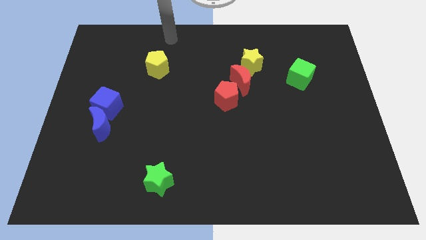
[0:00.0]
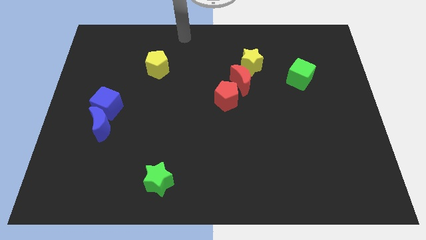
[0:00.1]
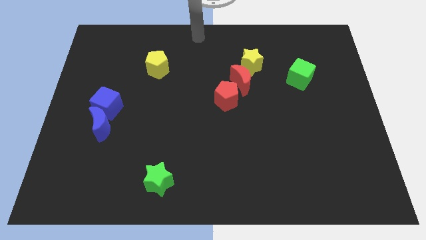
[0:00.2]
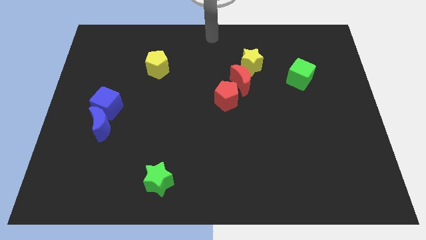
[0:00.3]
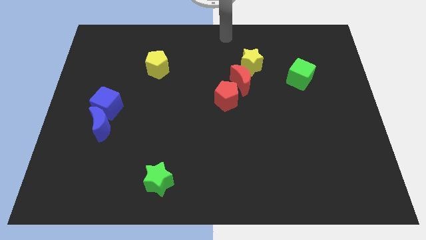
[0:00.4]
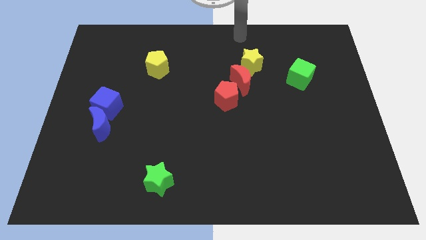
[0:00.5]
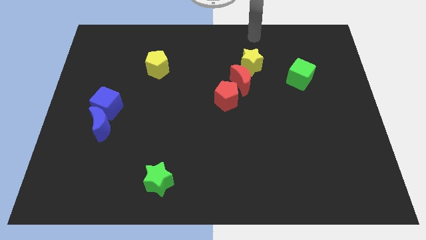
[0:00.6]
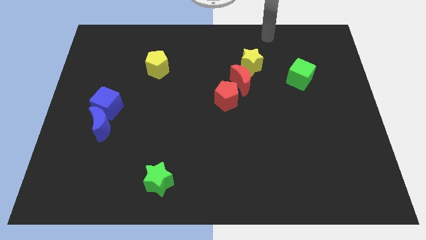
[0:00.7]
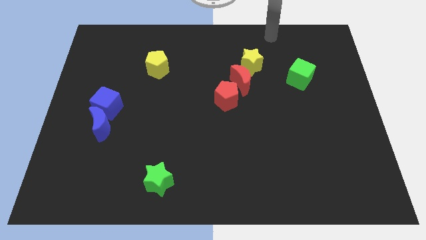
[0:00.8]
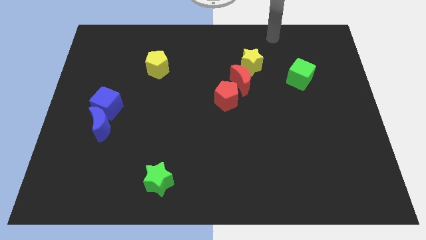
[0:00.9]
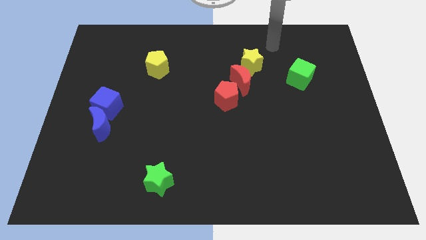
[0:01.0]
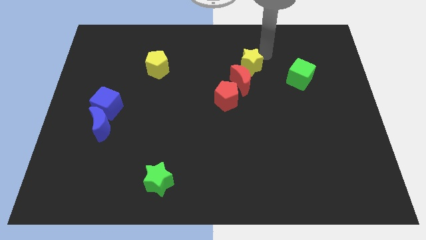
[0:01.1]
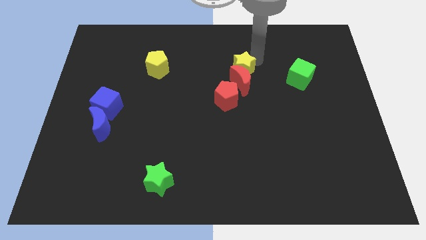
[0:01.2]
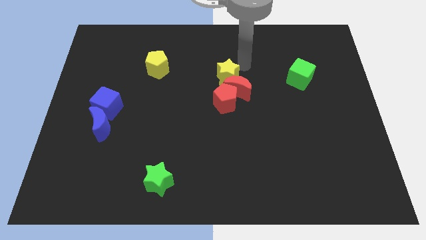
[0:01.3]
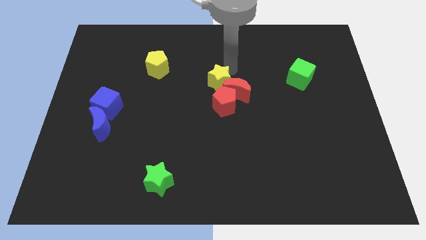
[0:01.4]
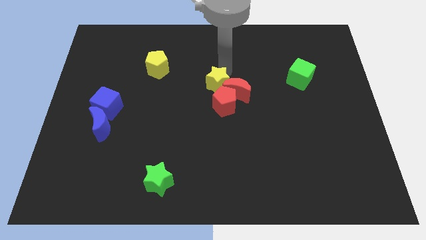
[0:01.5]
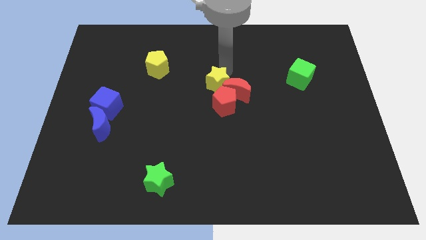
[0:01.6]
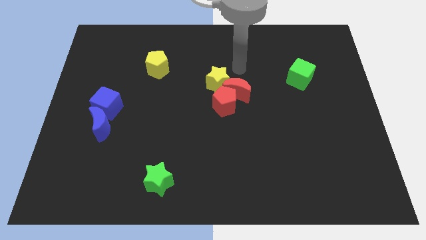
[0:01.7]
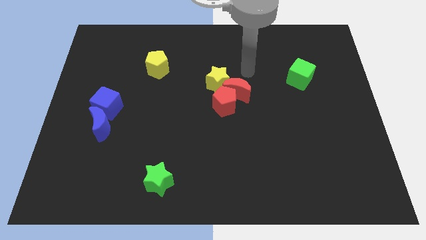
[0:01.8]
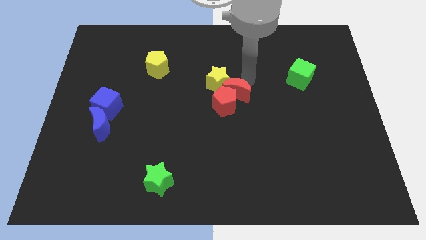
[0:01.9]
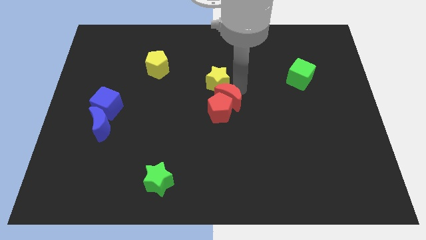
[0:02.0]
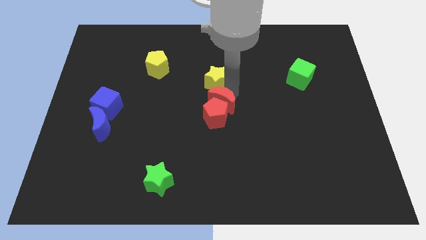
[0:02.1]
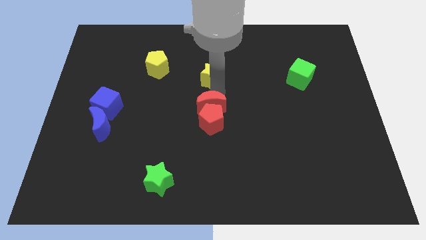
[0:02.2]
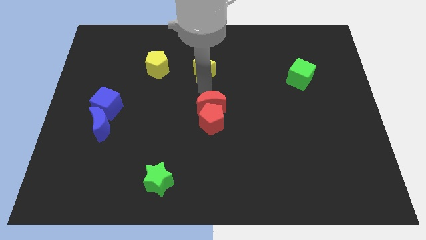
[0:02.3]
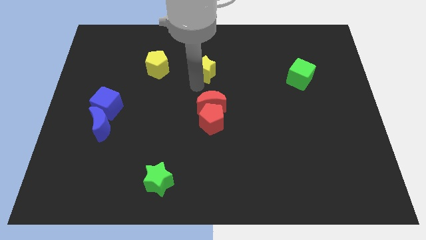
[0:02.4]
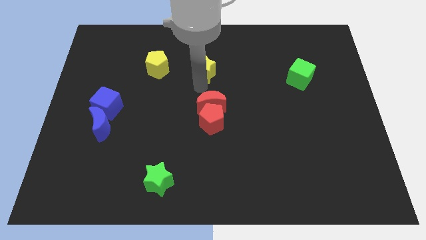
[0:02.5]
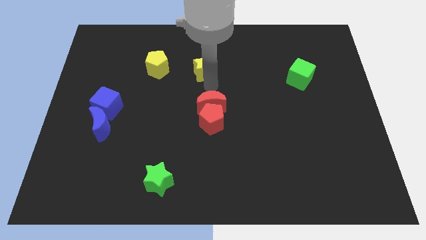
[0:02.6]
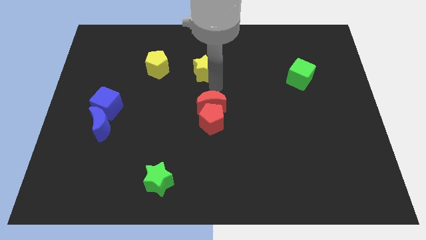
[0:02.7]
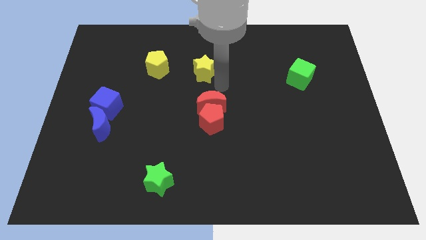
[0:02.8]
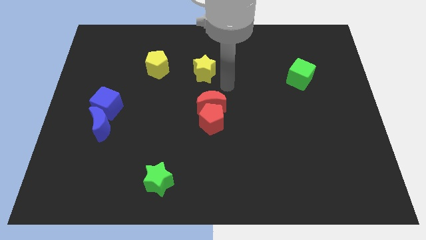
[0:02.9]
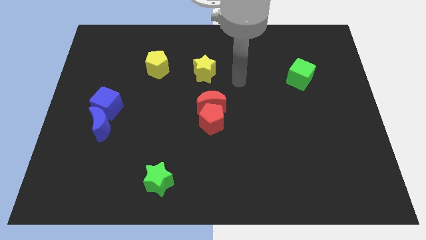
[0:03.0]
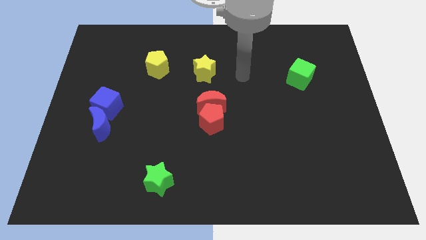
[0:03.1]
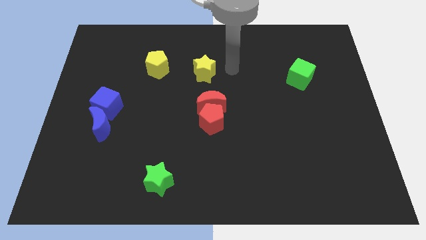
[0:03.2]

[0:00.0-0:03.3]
separate yellow star and the red moon

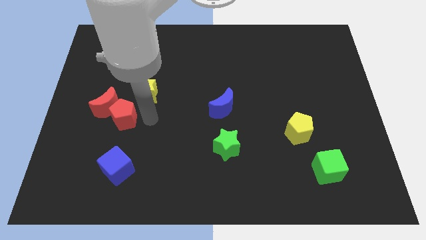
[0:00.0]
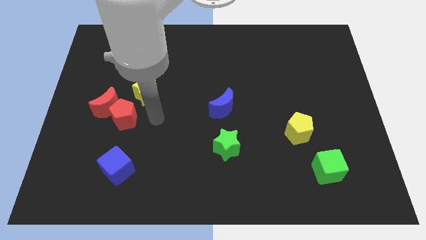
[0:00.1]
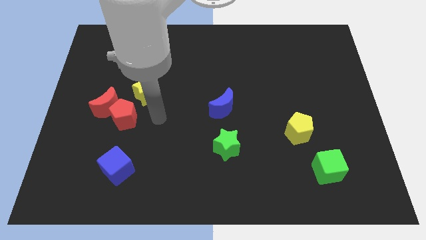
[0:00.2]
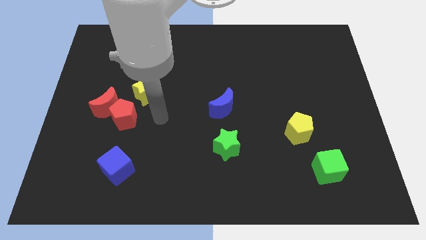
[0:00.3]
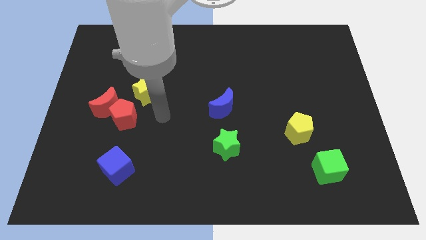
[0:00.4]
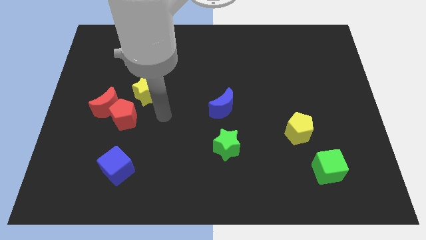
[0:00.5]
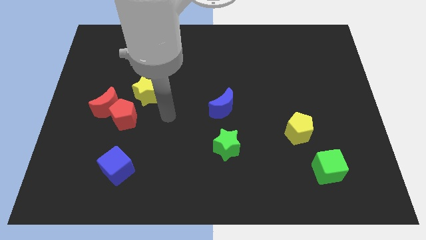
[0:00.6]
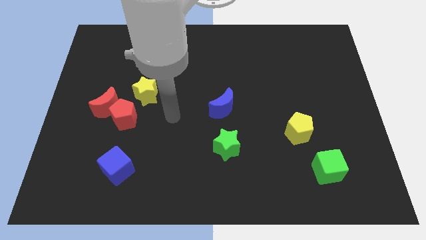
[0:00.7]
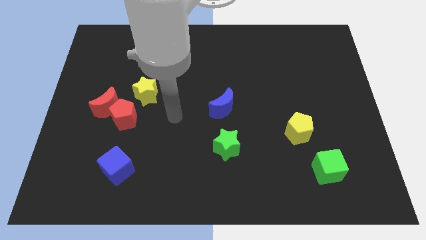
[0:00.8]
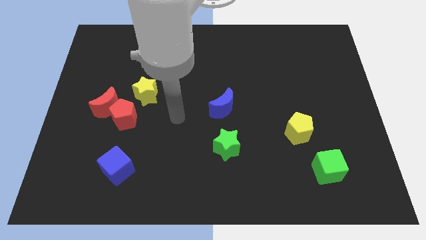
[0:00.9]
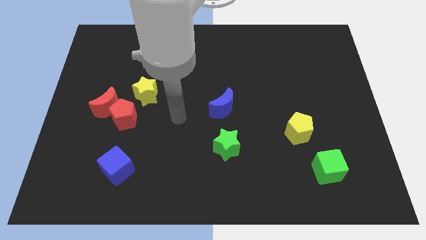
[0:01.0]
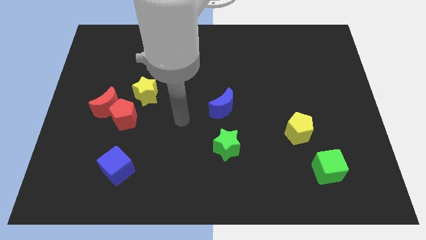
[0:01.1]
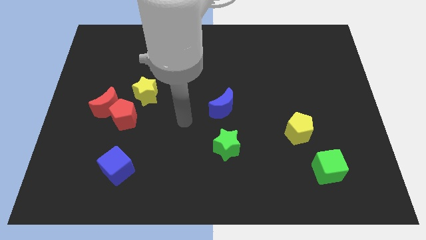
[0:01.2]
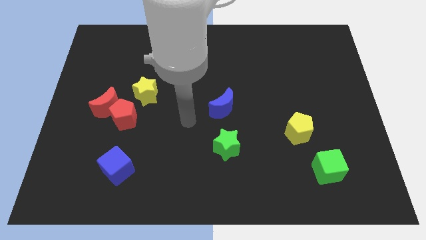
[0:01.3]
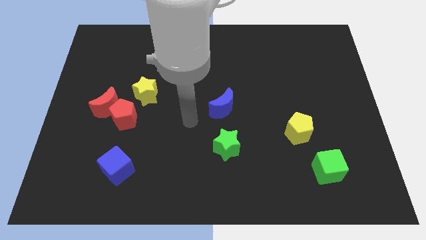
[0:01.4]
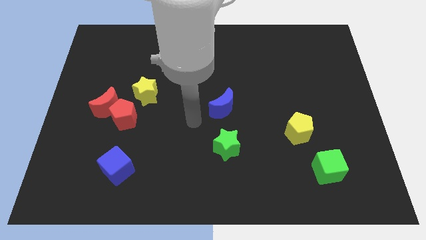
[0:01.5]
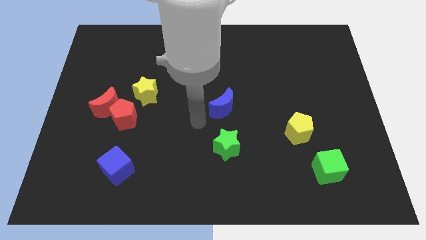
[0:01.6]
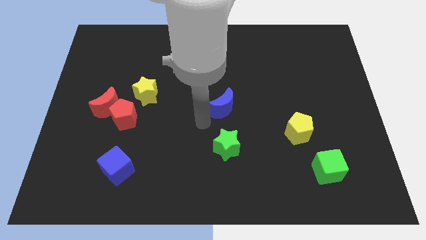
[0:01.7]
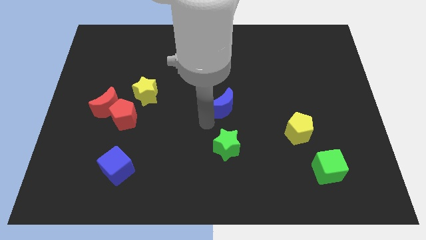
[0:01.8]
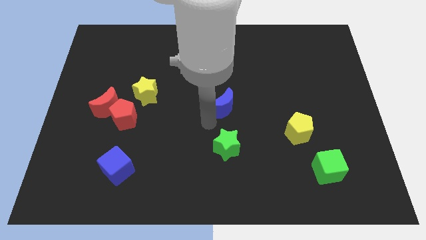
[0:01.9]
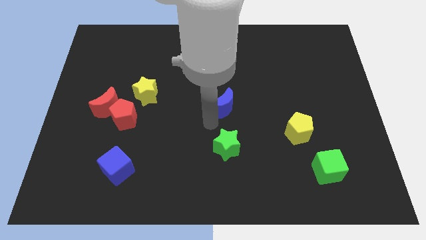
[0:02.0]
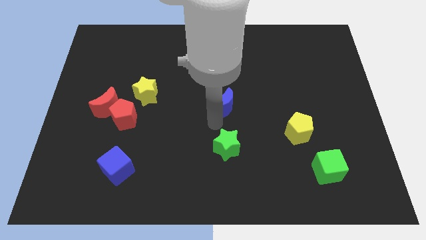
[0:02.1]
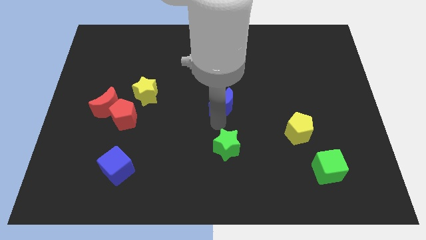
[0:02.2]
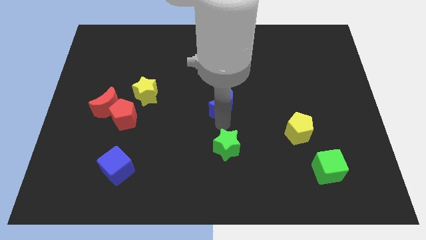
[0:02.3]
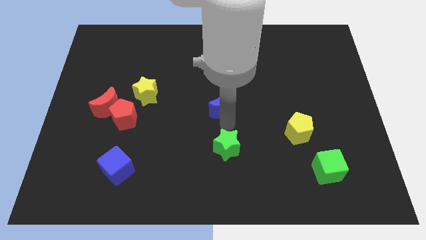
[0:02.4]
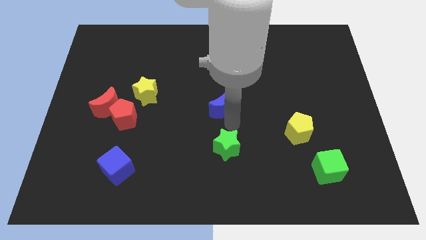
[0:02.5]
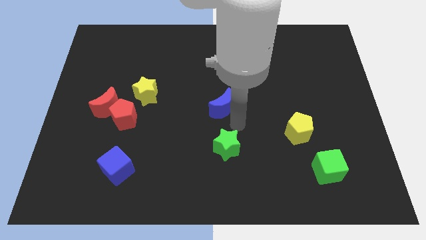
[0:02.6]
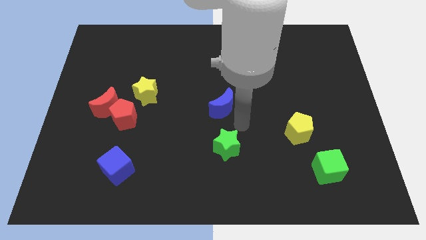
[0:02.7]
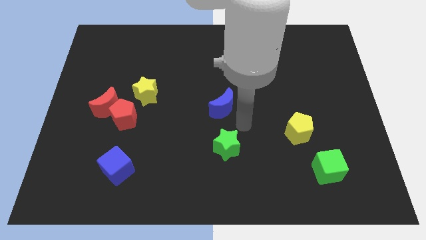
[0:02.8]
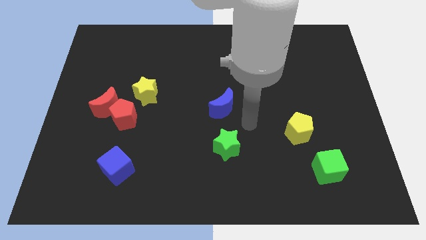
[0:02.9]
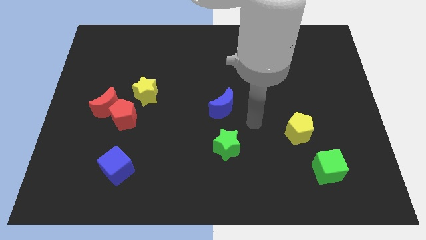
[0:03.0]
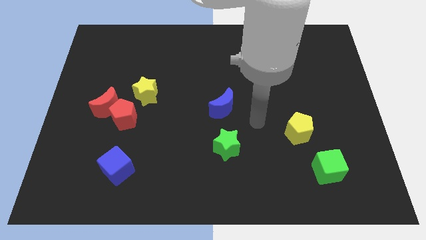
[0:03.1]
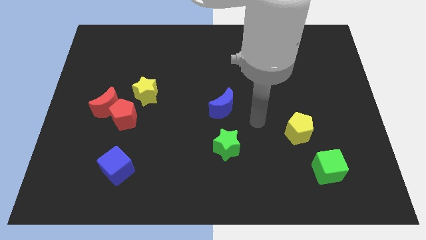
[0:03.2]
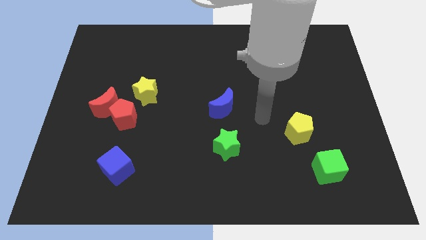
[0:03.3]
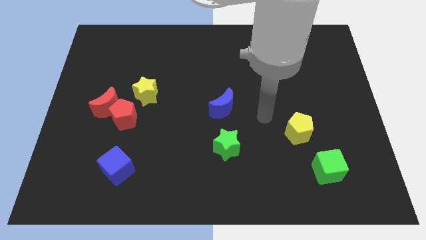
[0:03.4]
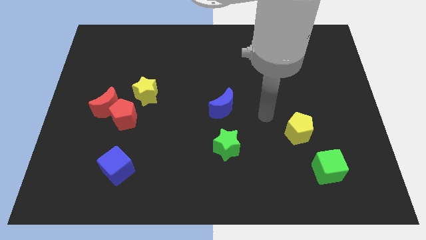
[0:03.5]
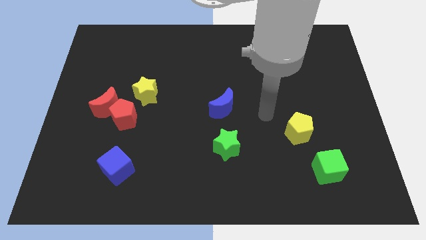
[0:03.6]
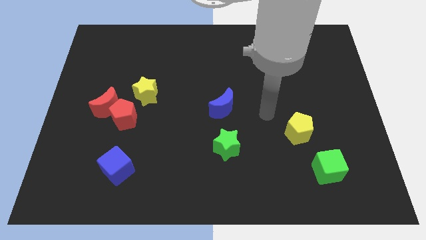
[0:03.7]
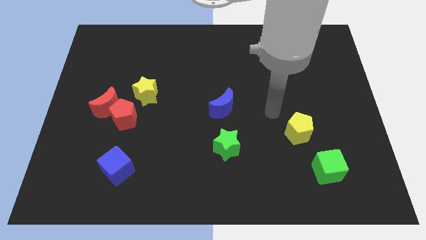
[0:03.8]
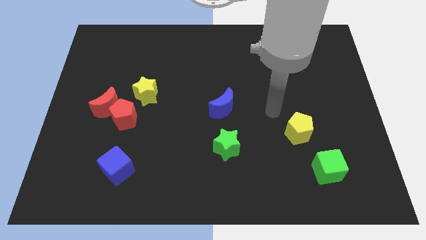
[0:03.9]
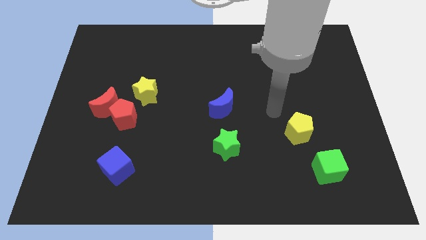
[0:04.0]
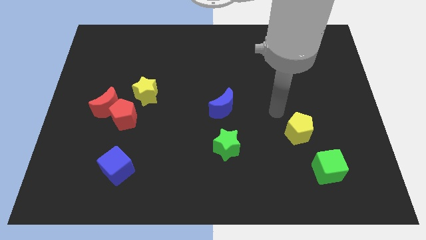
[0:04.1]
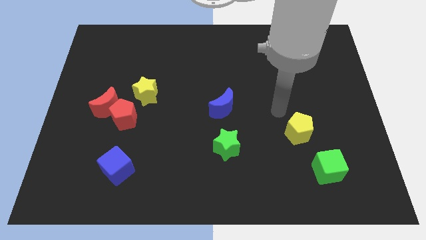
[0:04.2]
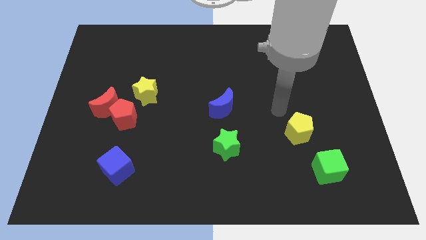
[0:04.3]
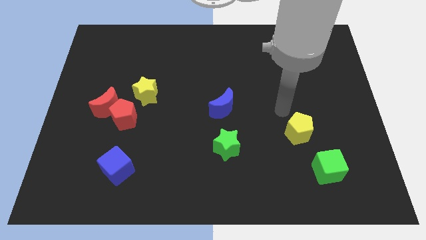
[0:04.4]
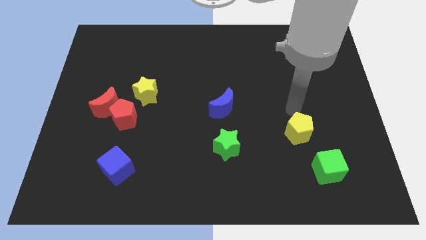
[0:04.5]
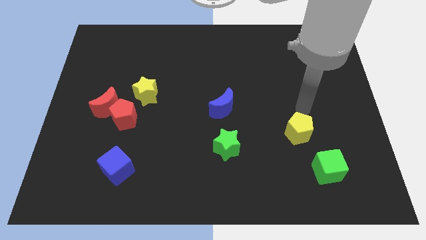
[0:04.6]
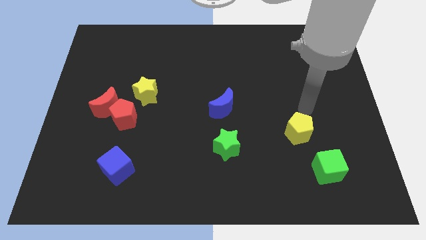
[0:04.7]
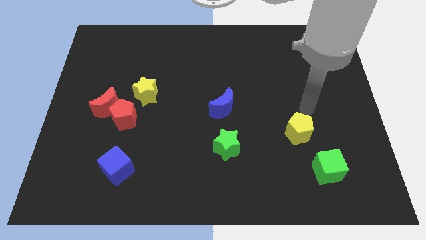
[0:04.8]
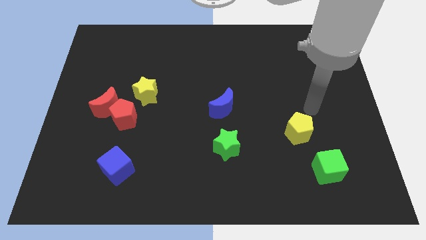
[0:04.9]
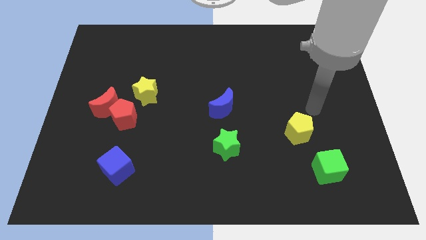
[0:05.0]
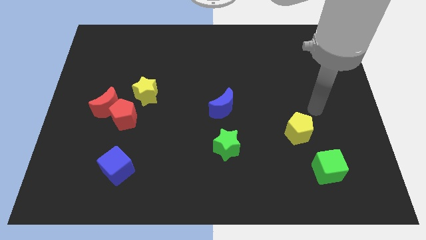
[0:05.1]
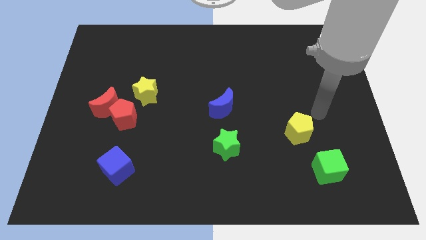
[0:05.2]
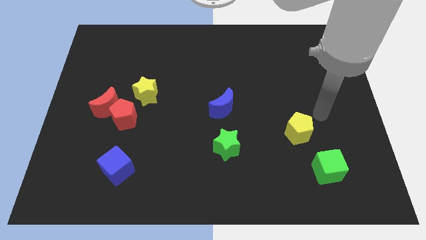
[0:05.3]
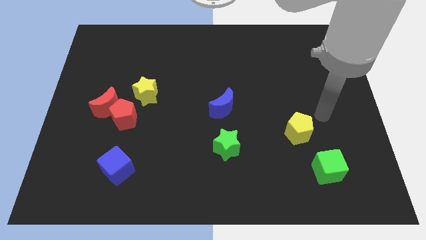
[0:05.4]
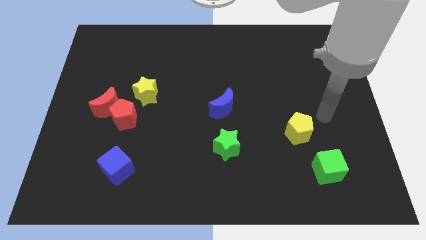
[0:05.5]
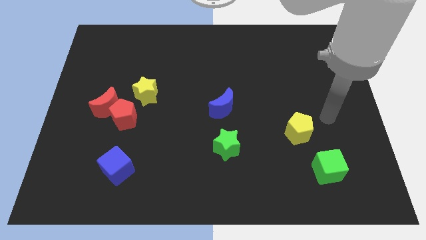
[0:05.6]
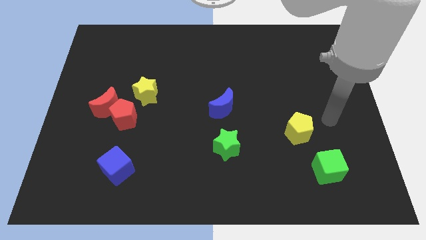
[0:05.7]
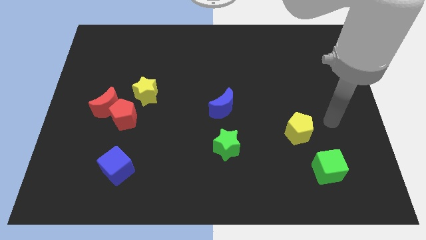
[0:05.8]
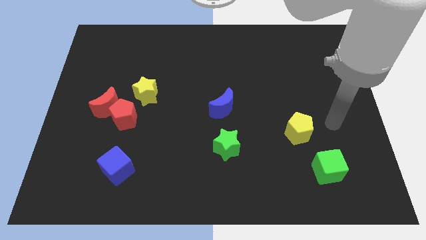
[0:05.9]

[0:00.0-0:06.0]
place your arm to the right of the yellow pentagon
